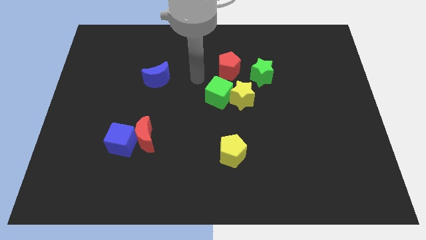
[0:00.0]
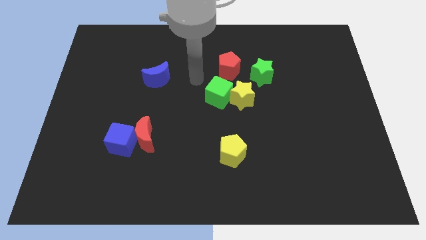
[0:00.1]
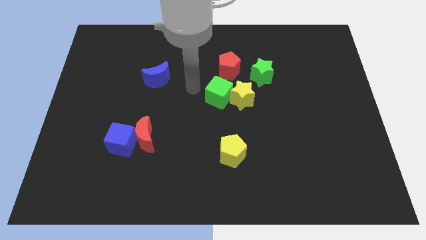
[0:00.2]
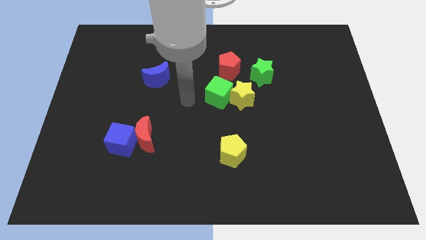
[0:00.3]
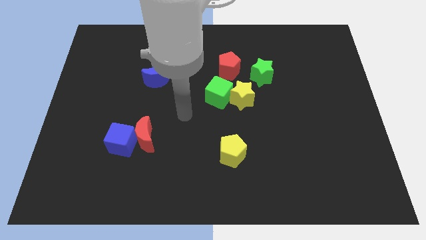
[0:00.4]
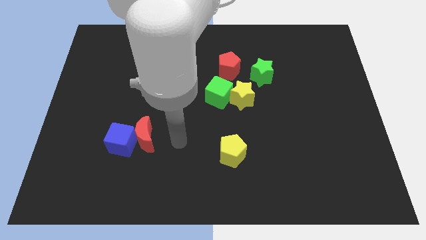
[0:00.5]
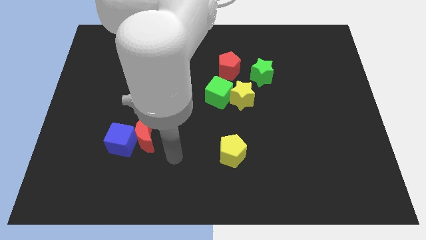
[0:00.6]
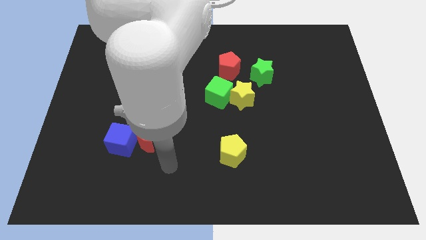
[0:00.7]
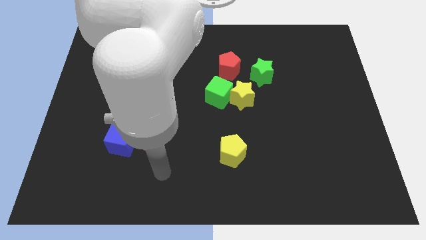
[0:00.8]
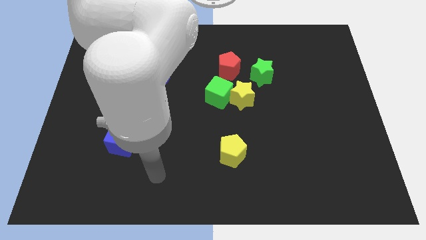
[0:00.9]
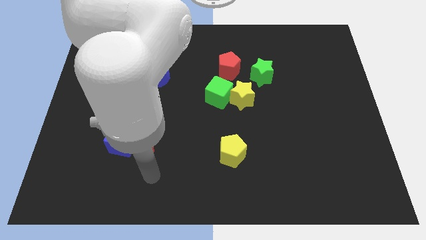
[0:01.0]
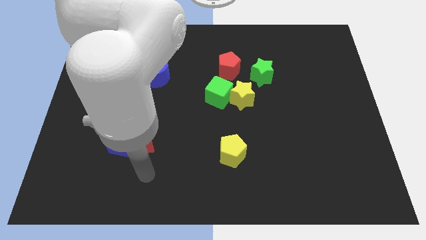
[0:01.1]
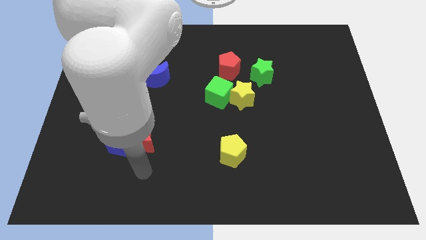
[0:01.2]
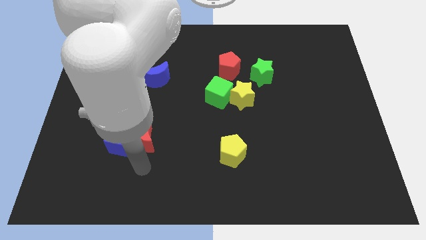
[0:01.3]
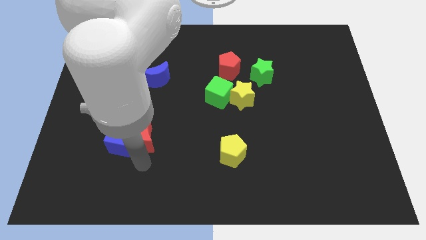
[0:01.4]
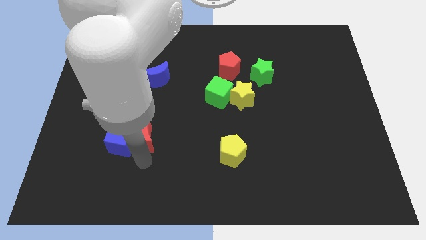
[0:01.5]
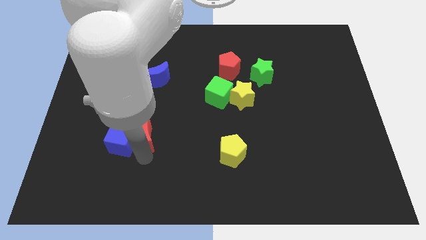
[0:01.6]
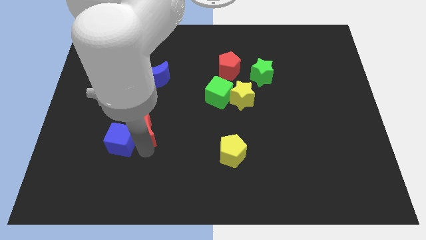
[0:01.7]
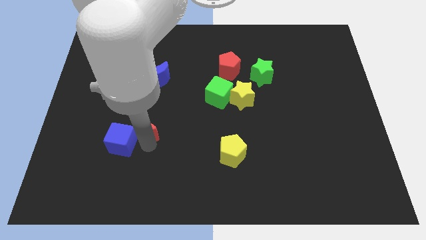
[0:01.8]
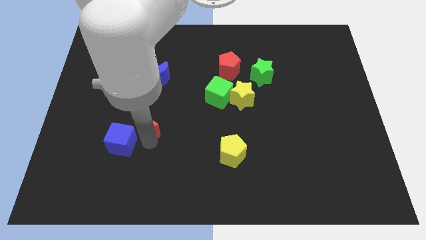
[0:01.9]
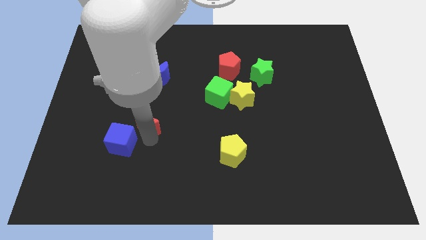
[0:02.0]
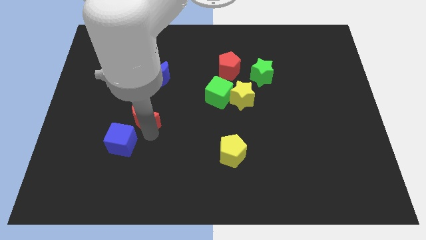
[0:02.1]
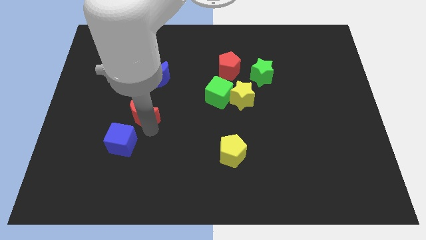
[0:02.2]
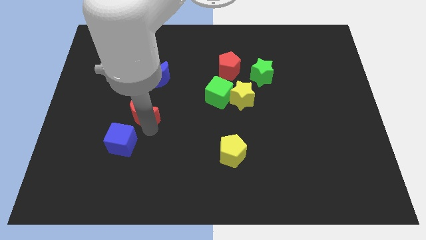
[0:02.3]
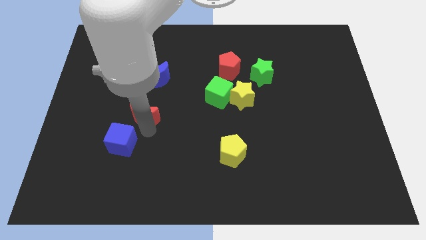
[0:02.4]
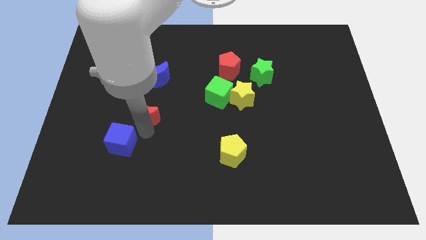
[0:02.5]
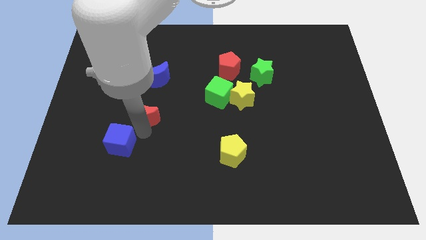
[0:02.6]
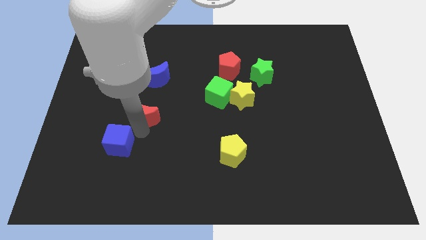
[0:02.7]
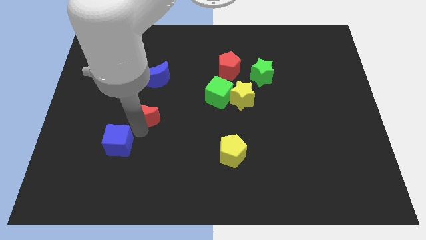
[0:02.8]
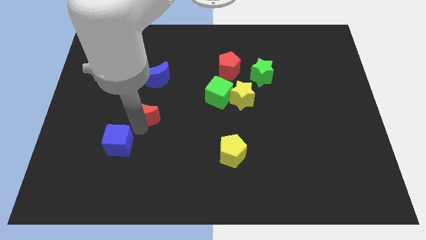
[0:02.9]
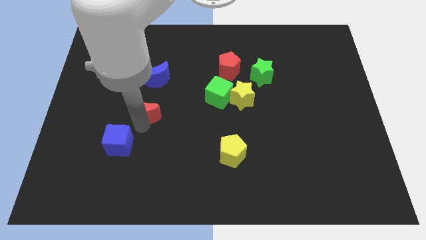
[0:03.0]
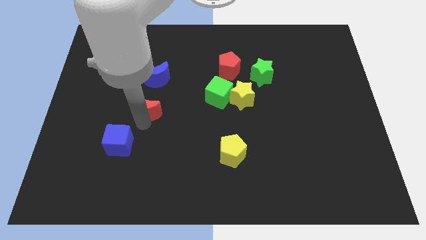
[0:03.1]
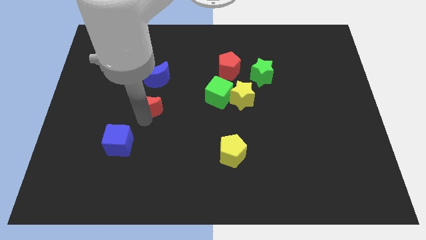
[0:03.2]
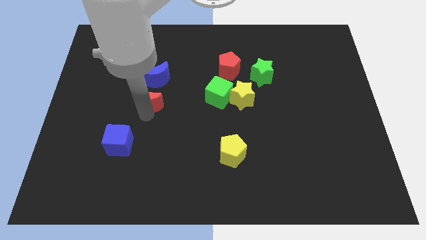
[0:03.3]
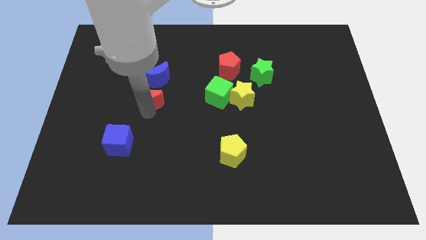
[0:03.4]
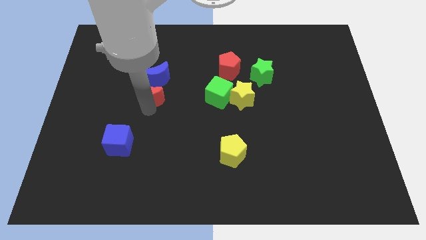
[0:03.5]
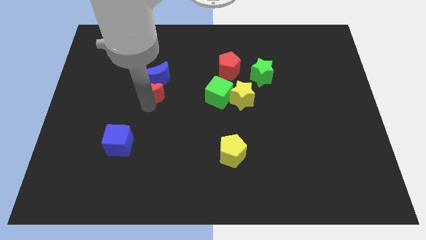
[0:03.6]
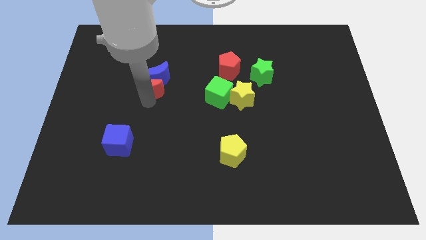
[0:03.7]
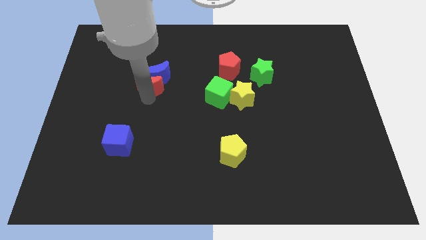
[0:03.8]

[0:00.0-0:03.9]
push the red moon close to the blue moon

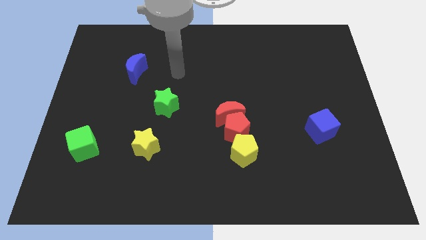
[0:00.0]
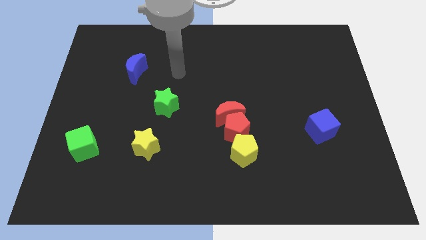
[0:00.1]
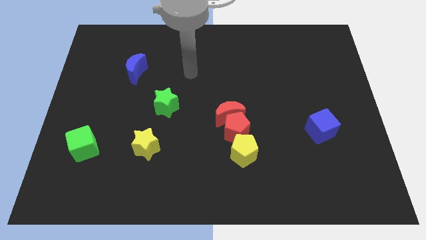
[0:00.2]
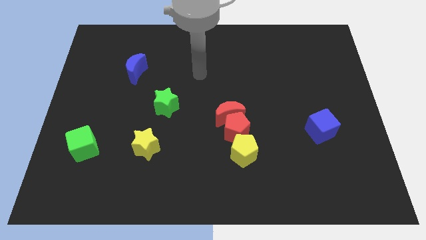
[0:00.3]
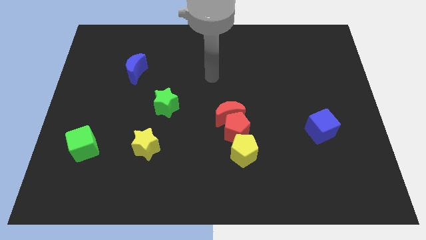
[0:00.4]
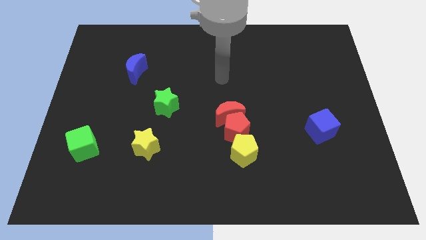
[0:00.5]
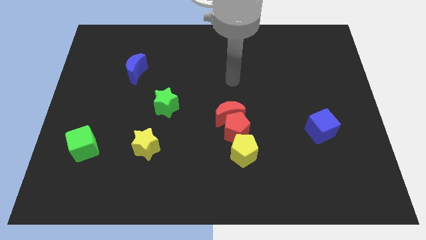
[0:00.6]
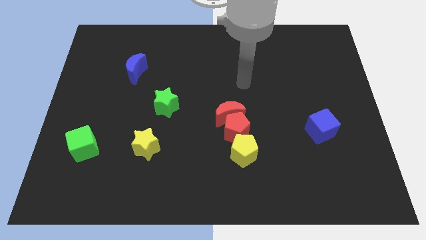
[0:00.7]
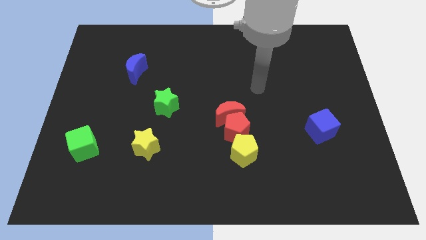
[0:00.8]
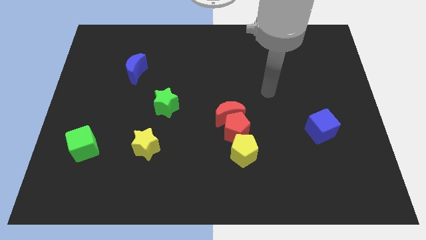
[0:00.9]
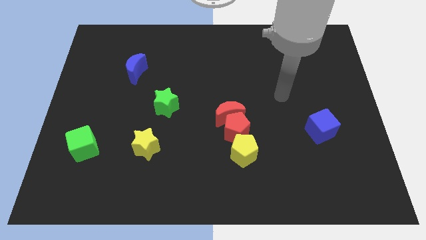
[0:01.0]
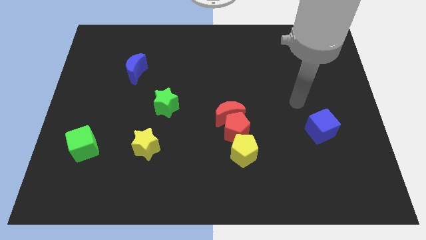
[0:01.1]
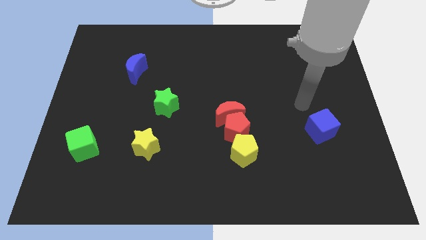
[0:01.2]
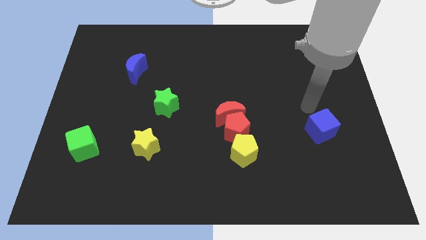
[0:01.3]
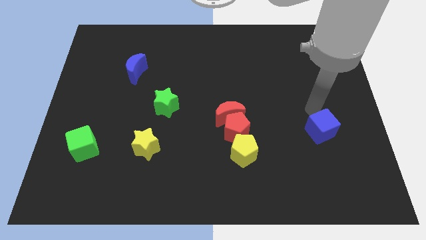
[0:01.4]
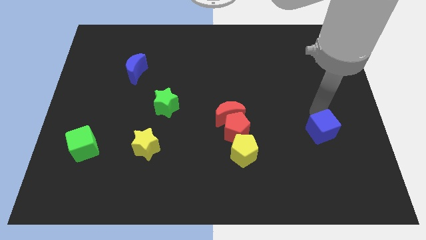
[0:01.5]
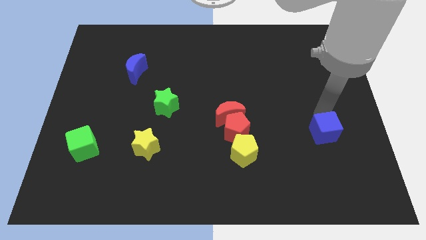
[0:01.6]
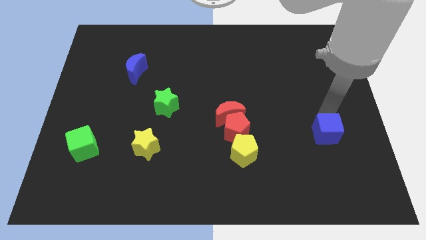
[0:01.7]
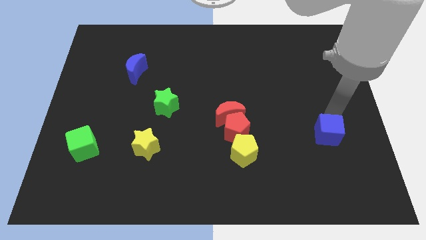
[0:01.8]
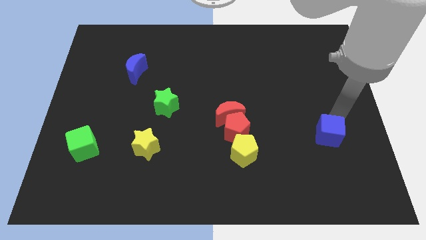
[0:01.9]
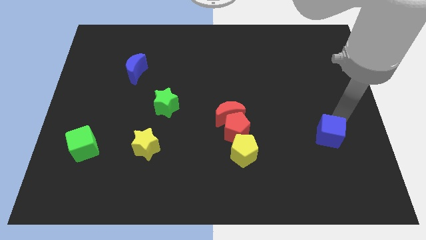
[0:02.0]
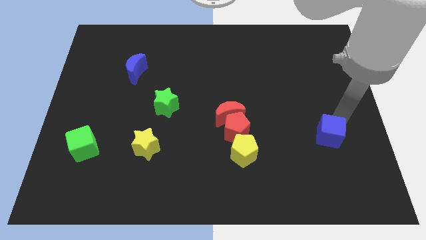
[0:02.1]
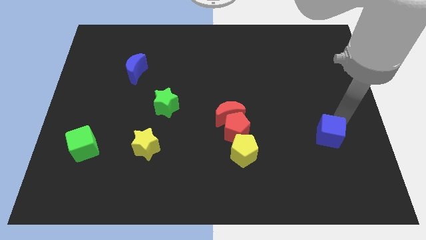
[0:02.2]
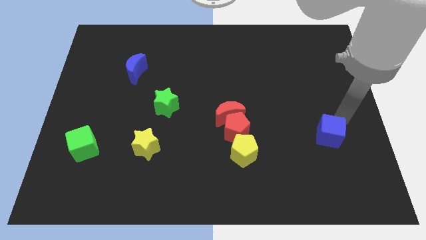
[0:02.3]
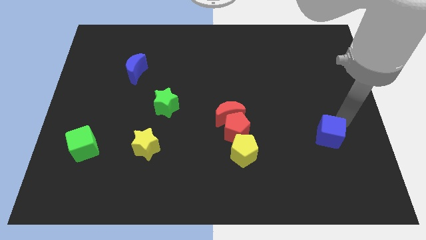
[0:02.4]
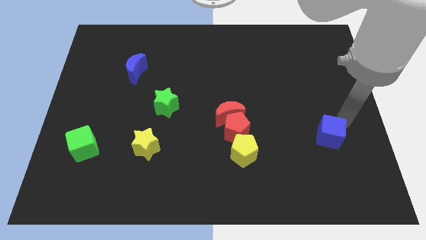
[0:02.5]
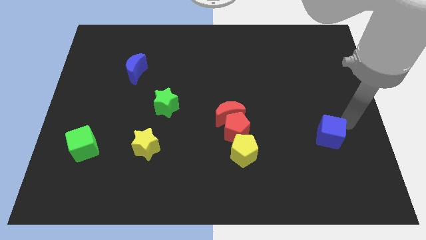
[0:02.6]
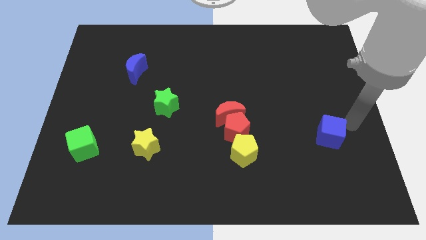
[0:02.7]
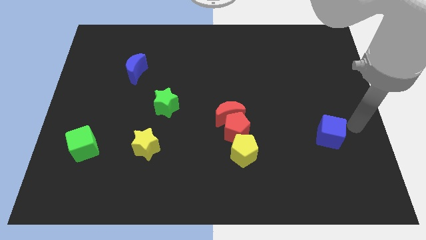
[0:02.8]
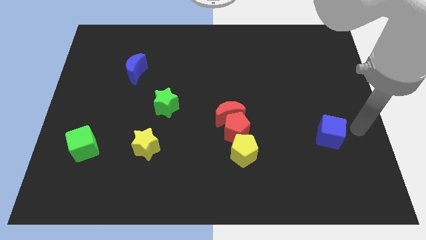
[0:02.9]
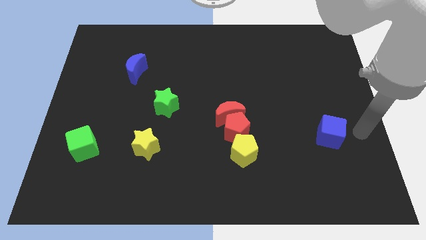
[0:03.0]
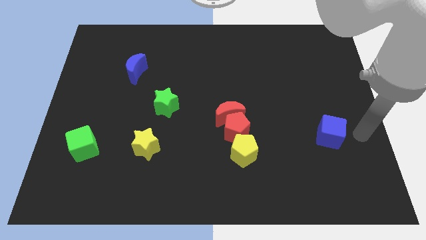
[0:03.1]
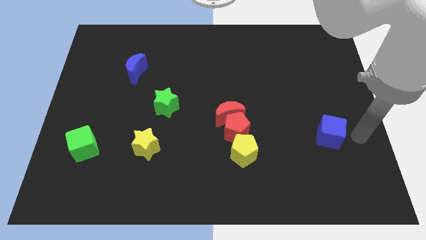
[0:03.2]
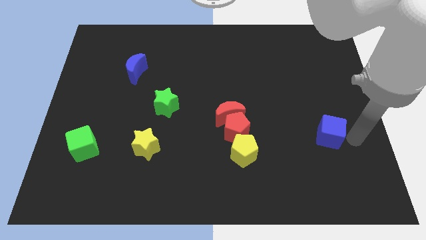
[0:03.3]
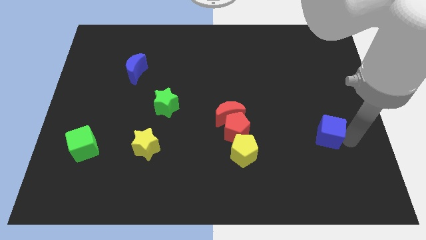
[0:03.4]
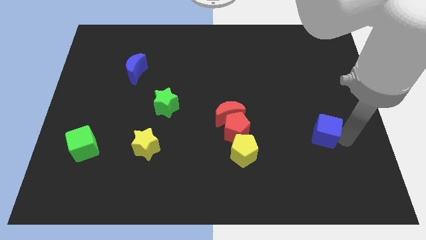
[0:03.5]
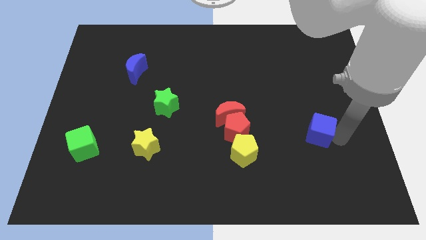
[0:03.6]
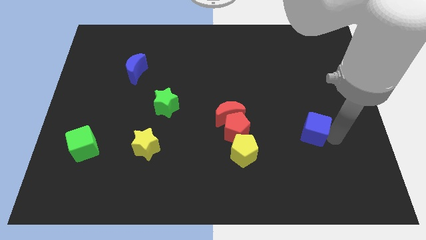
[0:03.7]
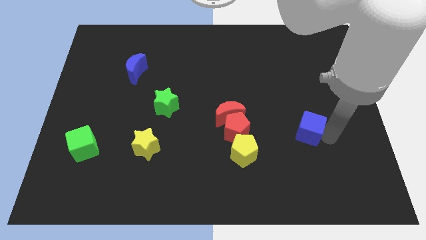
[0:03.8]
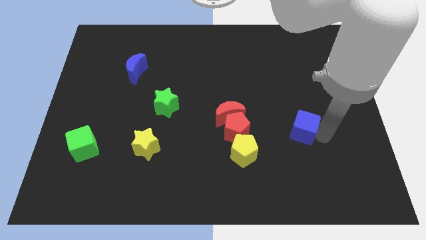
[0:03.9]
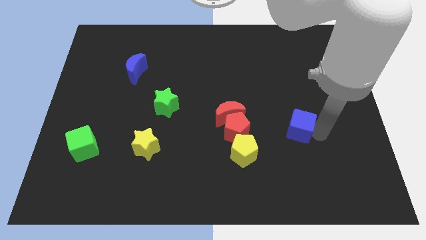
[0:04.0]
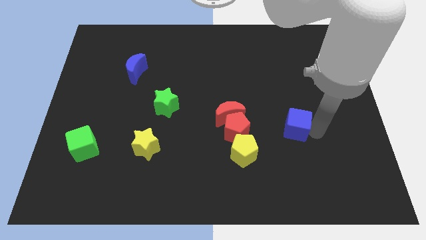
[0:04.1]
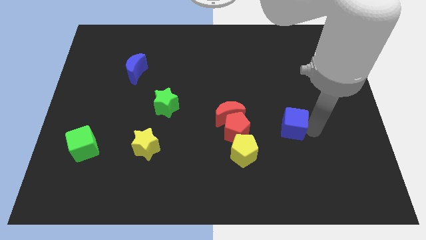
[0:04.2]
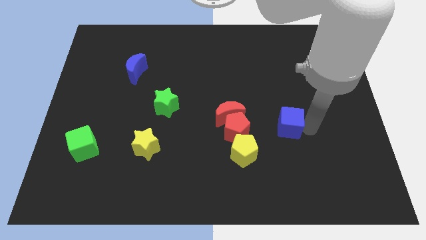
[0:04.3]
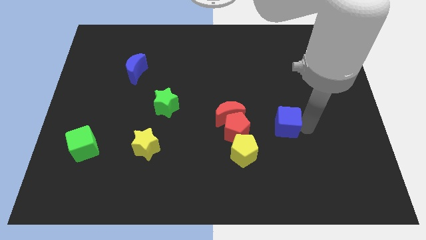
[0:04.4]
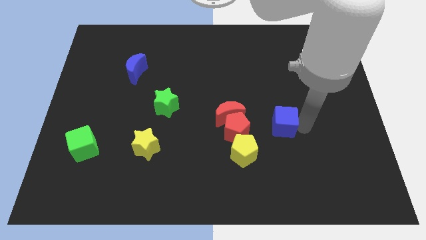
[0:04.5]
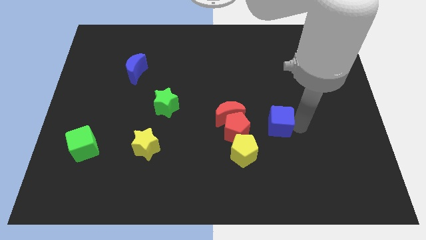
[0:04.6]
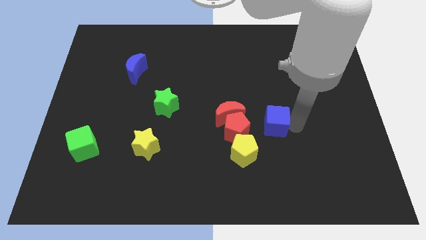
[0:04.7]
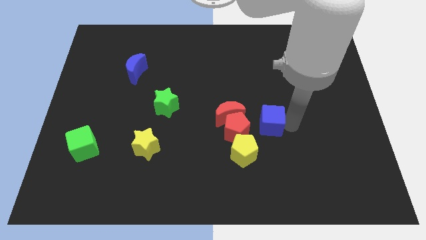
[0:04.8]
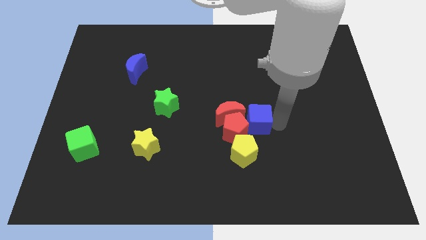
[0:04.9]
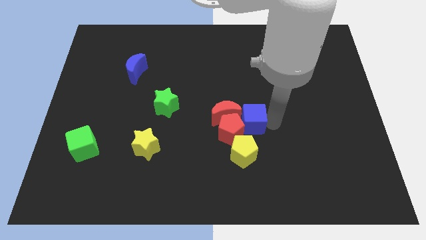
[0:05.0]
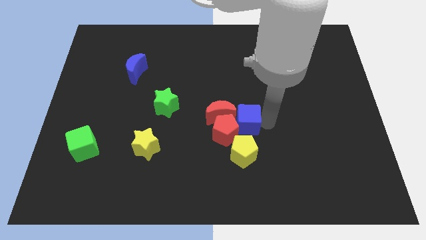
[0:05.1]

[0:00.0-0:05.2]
push the blue cube to the red pentagon
